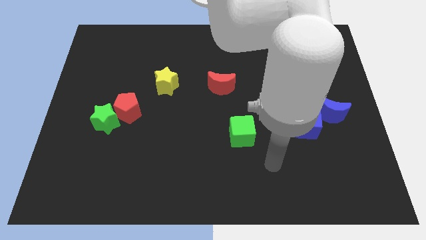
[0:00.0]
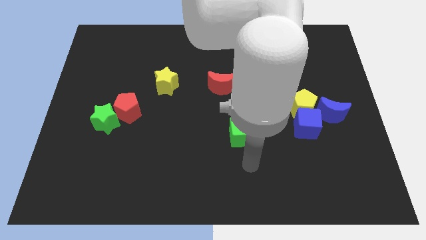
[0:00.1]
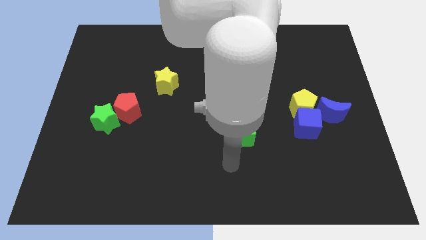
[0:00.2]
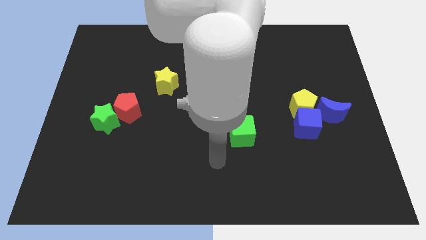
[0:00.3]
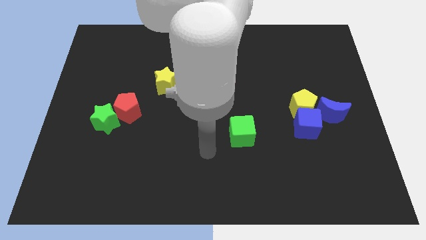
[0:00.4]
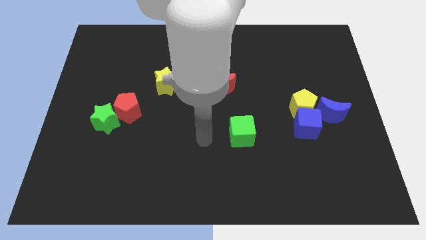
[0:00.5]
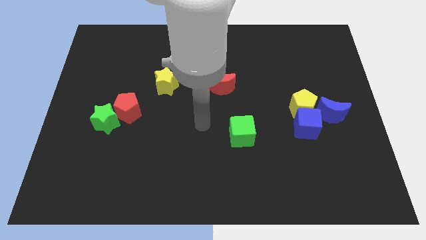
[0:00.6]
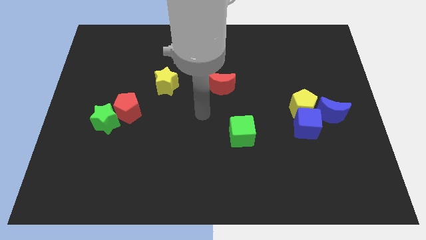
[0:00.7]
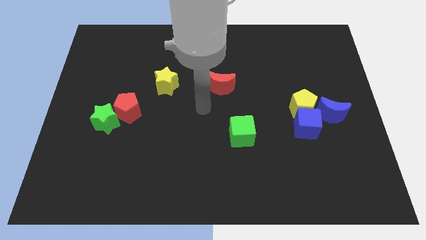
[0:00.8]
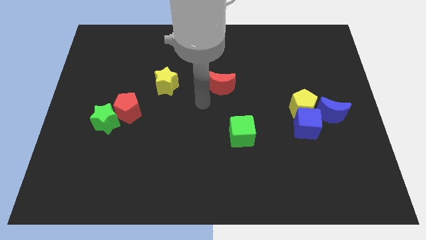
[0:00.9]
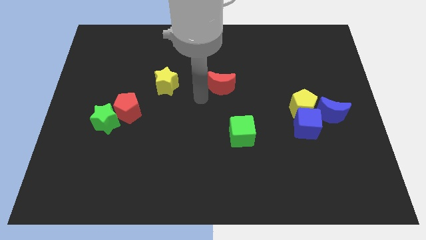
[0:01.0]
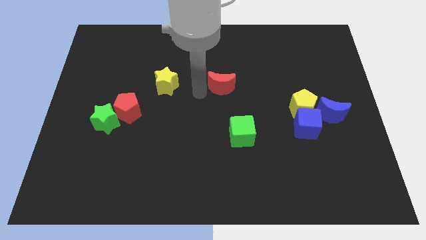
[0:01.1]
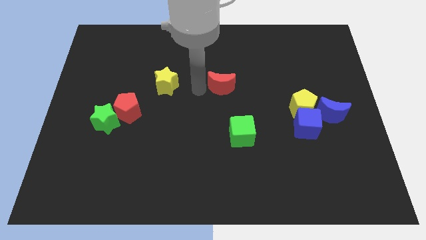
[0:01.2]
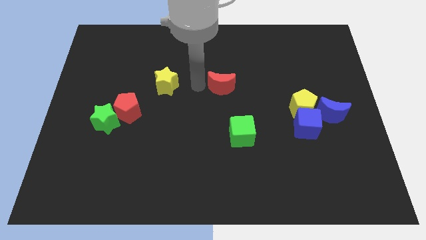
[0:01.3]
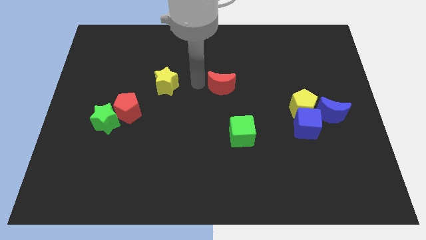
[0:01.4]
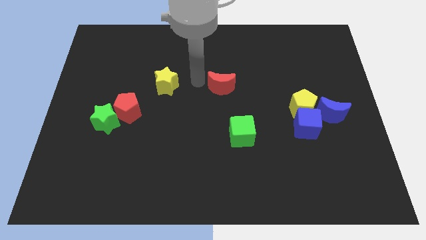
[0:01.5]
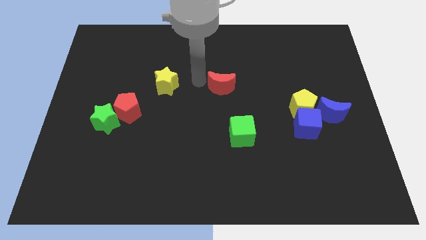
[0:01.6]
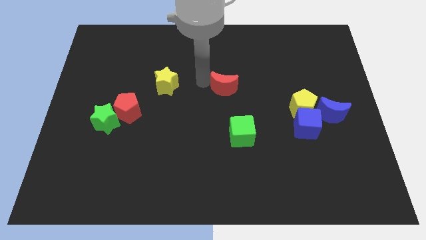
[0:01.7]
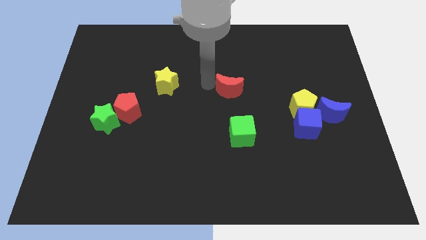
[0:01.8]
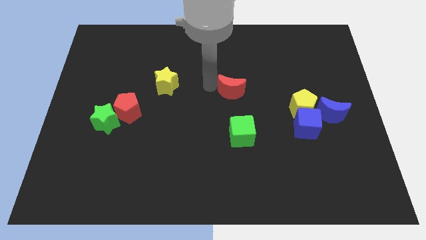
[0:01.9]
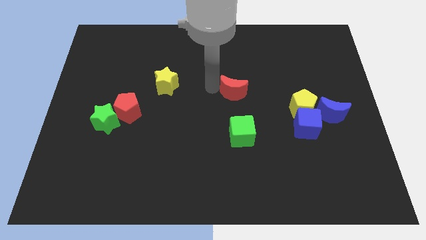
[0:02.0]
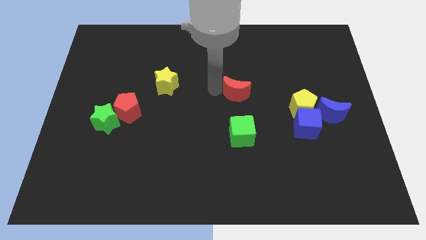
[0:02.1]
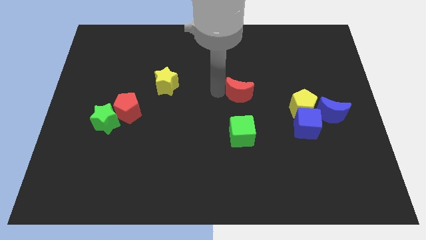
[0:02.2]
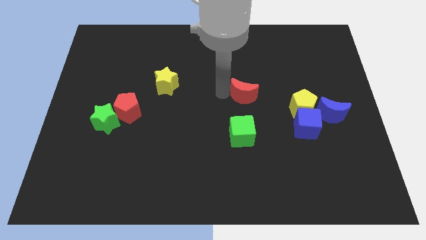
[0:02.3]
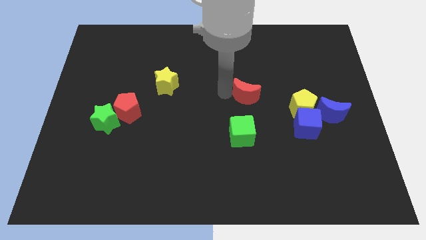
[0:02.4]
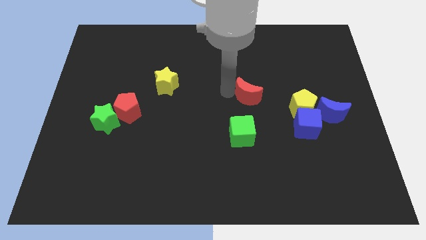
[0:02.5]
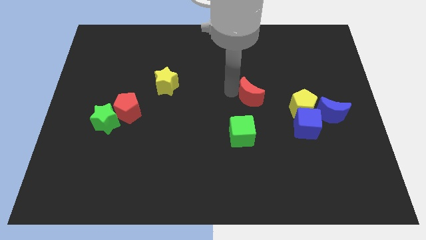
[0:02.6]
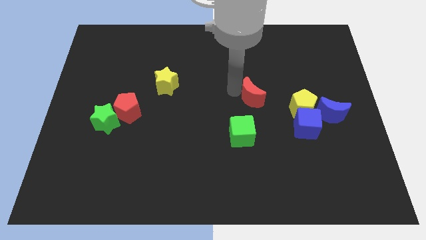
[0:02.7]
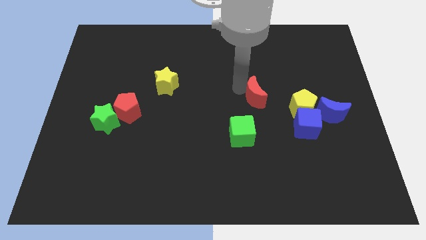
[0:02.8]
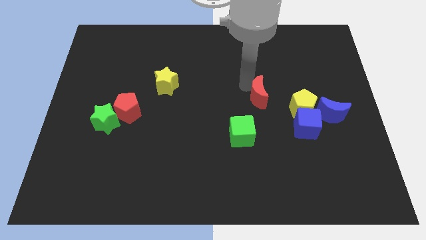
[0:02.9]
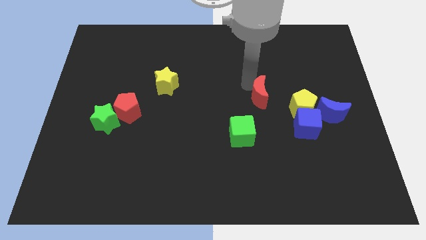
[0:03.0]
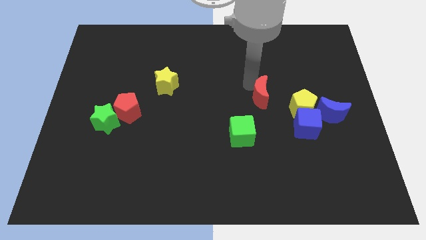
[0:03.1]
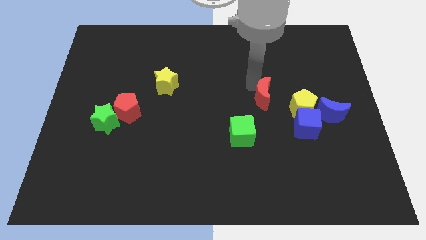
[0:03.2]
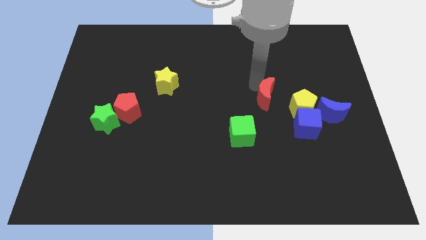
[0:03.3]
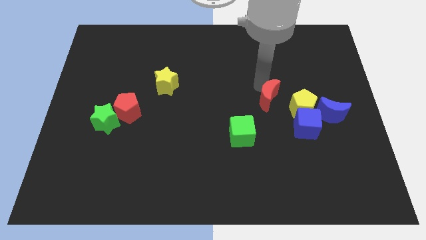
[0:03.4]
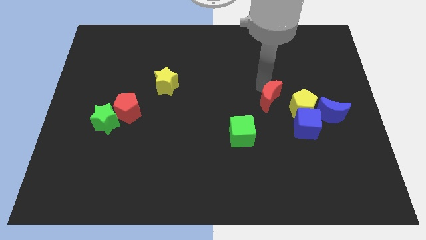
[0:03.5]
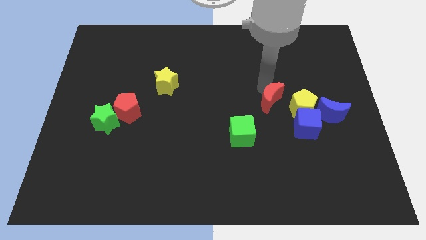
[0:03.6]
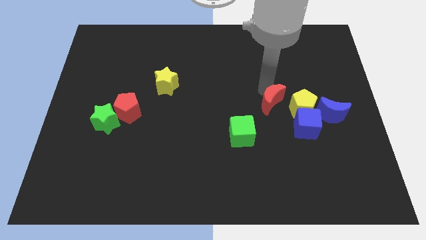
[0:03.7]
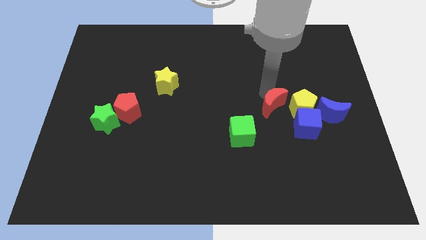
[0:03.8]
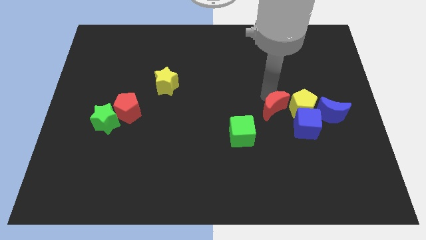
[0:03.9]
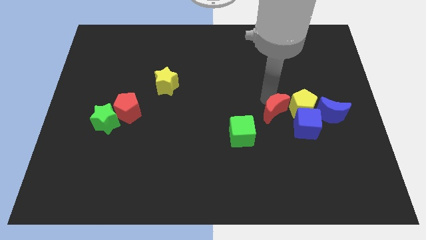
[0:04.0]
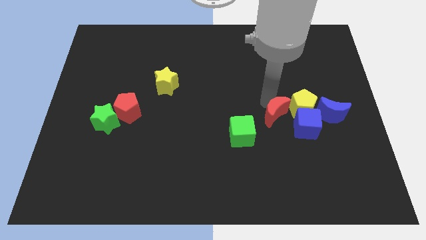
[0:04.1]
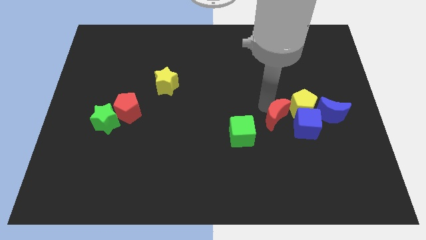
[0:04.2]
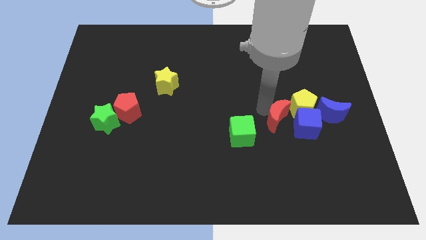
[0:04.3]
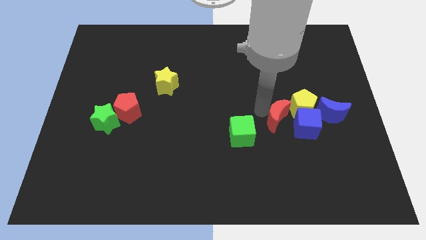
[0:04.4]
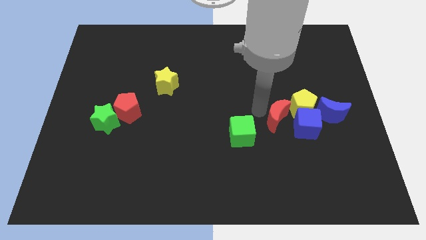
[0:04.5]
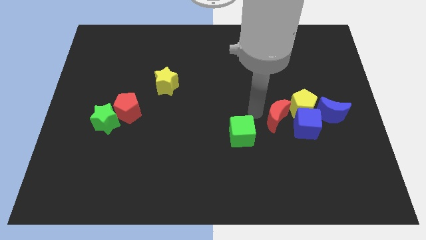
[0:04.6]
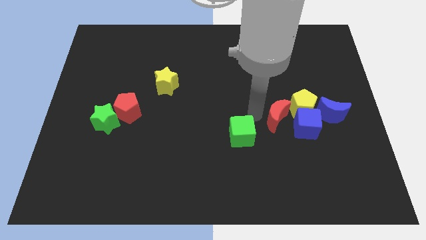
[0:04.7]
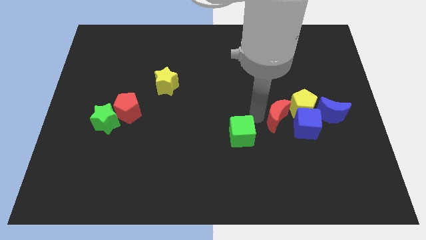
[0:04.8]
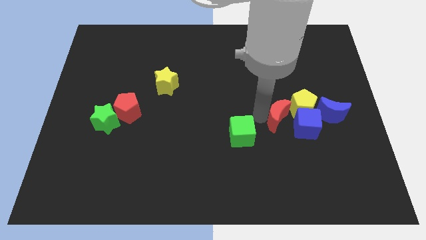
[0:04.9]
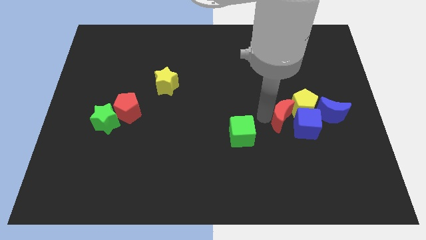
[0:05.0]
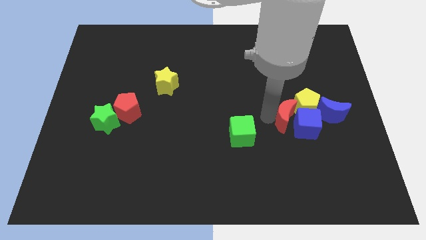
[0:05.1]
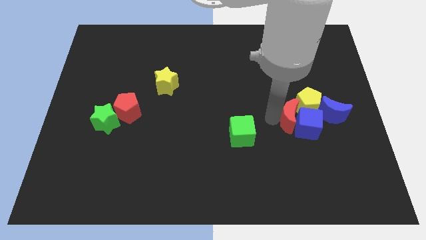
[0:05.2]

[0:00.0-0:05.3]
put the red moon to the blue cube

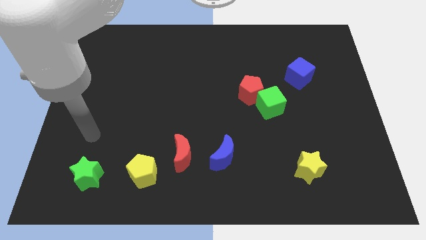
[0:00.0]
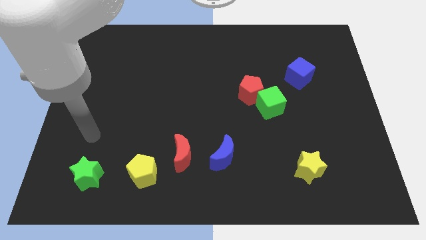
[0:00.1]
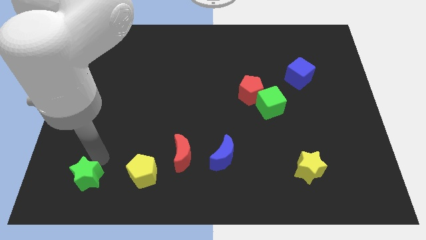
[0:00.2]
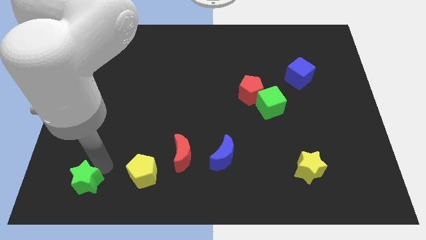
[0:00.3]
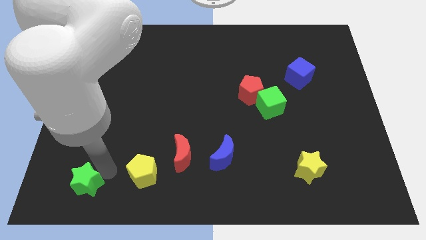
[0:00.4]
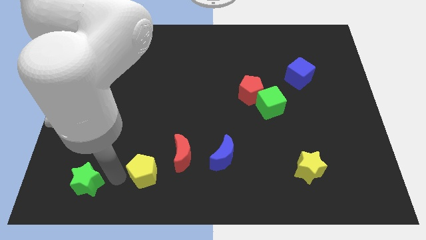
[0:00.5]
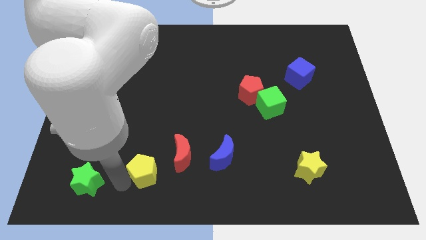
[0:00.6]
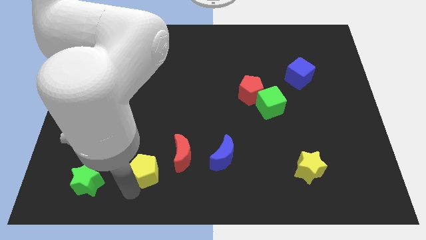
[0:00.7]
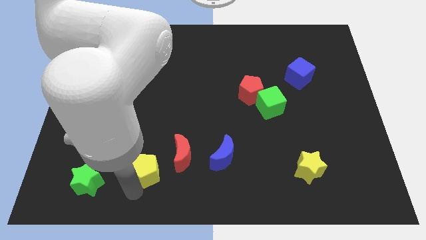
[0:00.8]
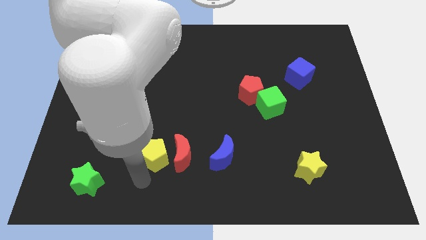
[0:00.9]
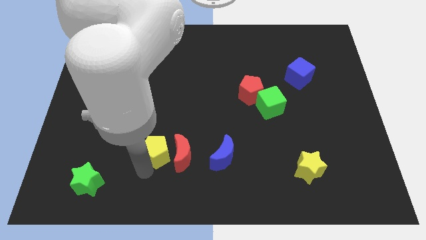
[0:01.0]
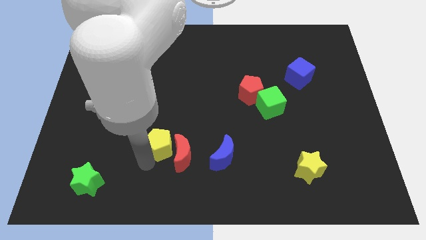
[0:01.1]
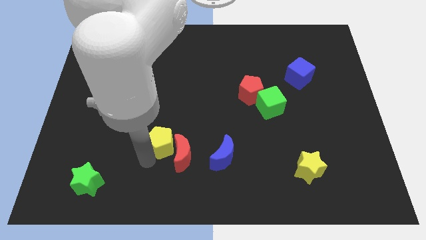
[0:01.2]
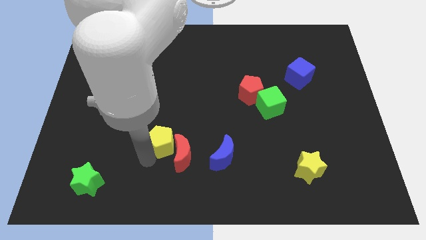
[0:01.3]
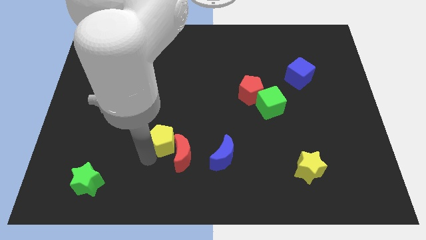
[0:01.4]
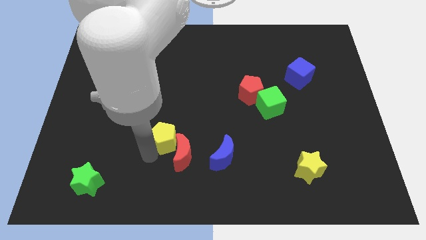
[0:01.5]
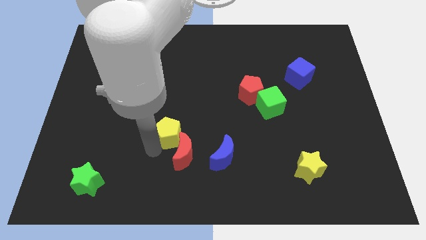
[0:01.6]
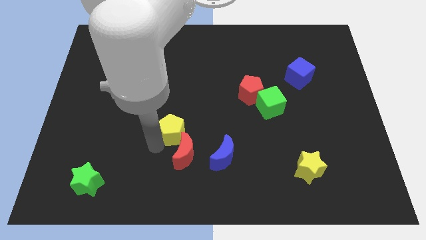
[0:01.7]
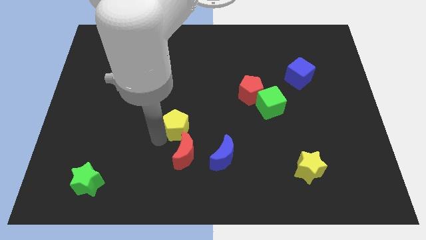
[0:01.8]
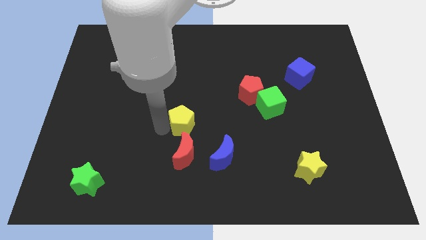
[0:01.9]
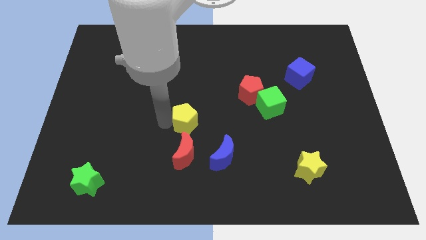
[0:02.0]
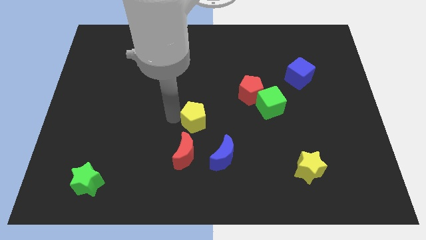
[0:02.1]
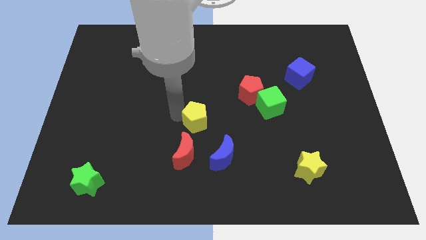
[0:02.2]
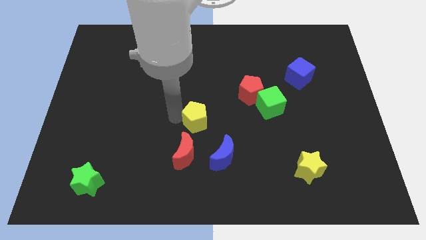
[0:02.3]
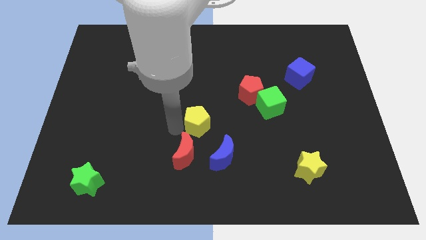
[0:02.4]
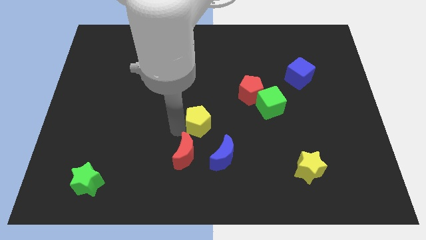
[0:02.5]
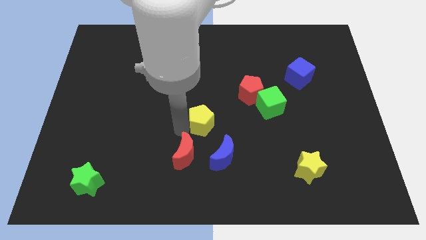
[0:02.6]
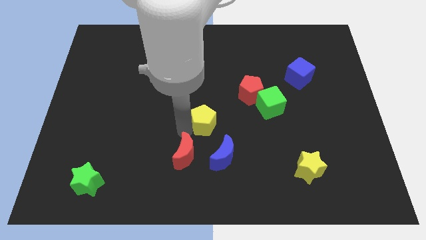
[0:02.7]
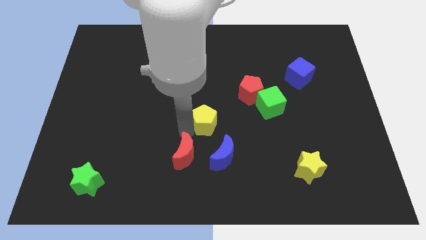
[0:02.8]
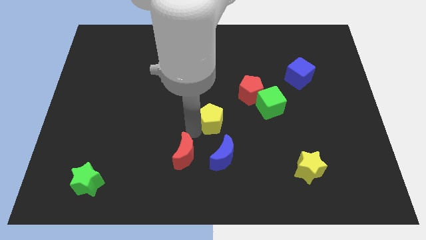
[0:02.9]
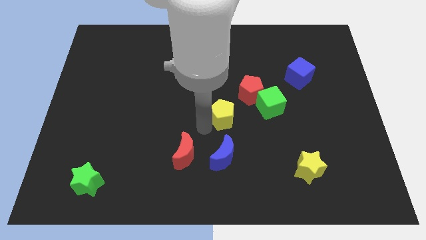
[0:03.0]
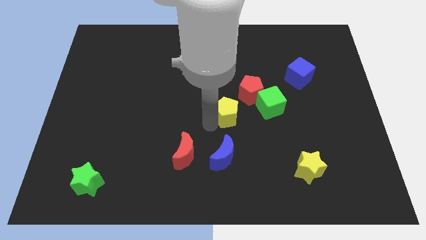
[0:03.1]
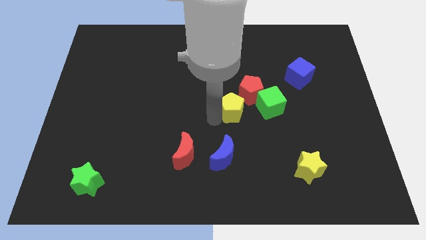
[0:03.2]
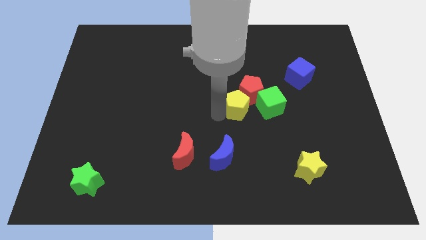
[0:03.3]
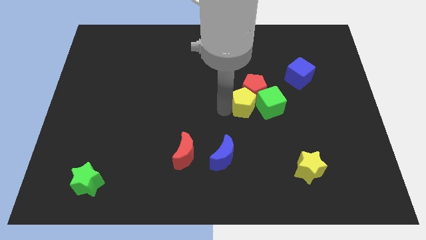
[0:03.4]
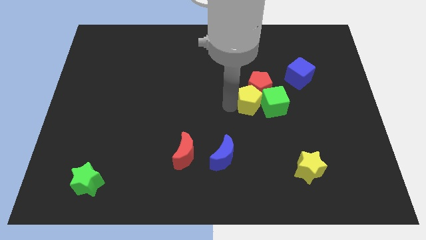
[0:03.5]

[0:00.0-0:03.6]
push the yellow pentagon towards the red pentagon
